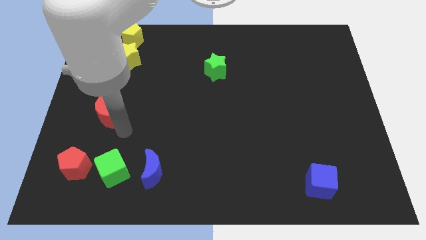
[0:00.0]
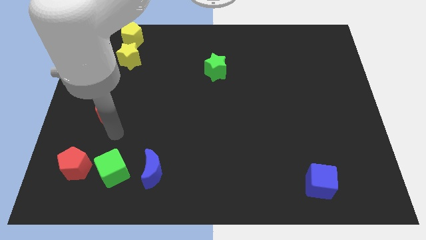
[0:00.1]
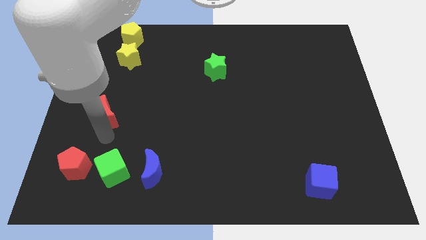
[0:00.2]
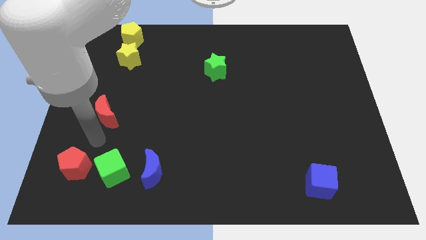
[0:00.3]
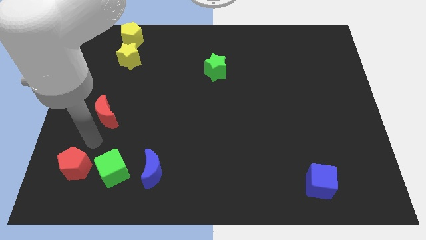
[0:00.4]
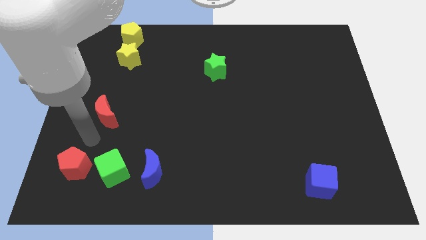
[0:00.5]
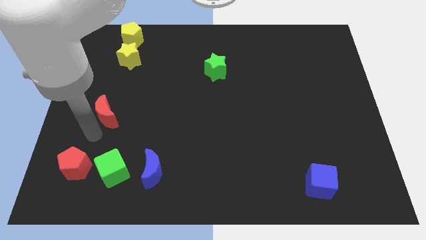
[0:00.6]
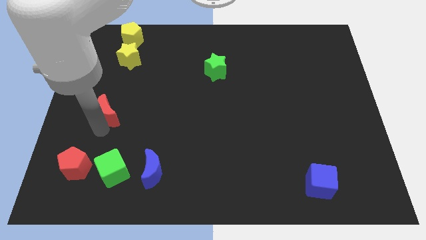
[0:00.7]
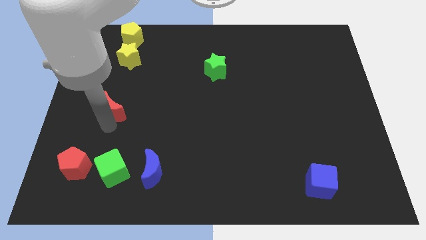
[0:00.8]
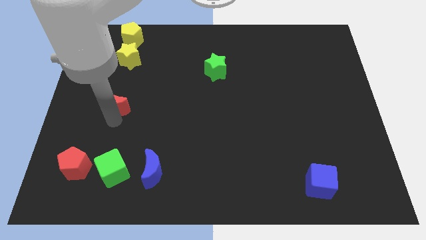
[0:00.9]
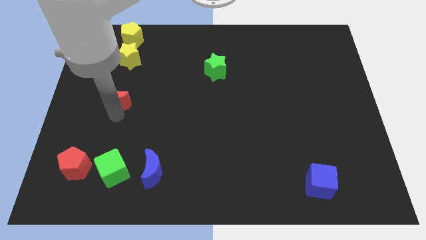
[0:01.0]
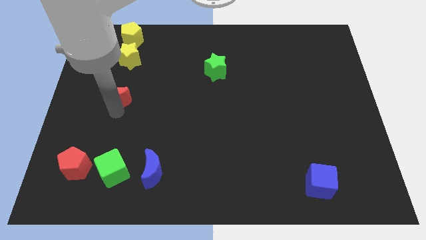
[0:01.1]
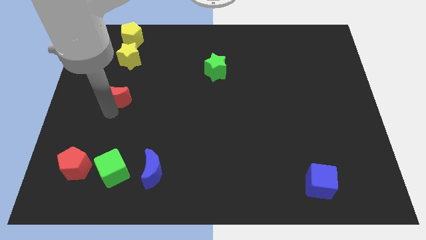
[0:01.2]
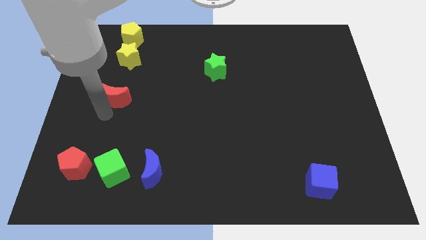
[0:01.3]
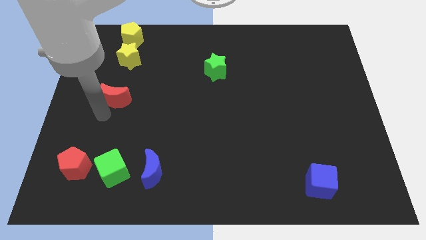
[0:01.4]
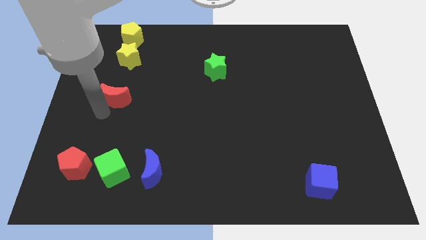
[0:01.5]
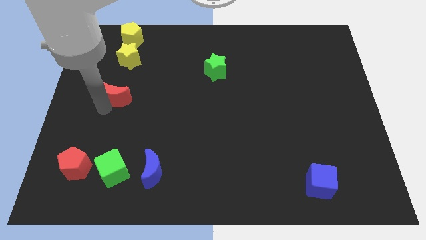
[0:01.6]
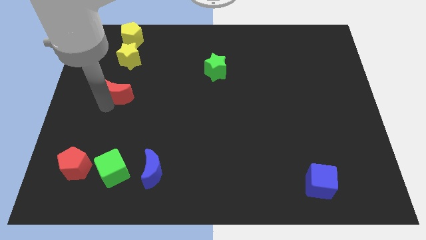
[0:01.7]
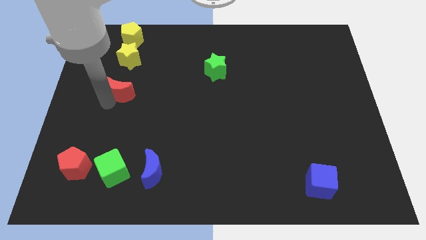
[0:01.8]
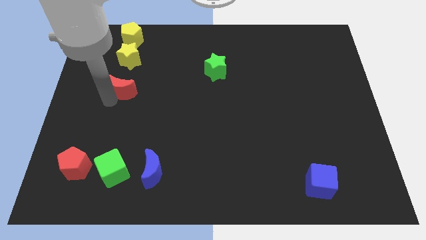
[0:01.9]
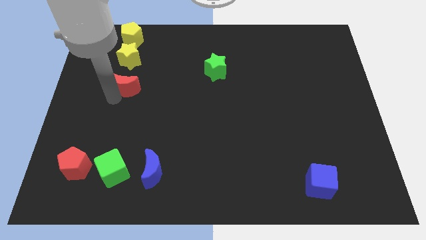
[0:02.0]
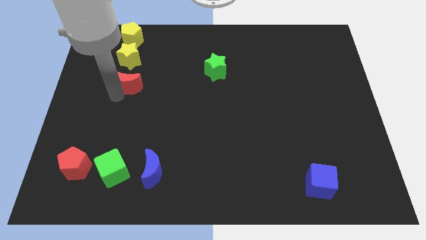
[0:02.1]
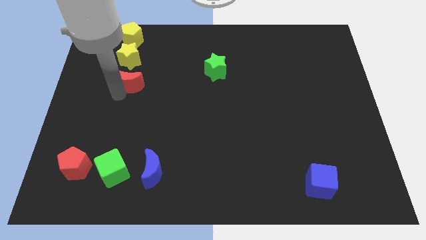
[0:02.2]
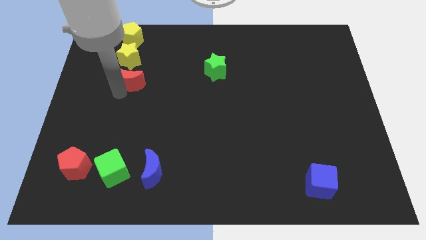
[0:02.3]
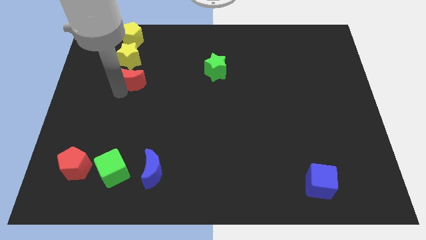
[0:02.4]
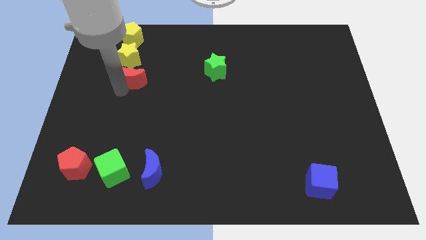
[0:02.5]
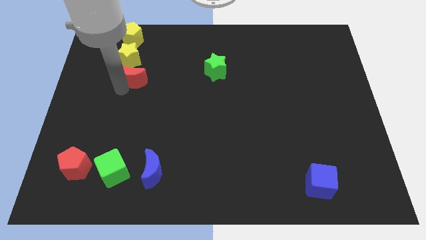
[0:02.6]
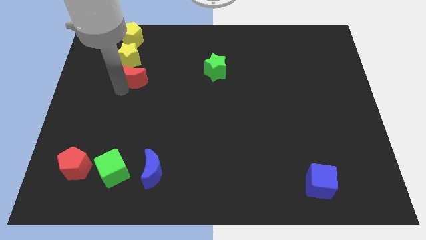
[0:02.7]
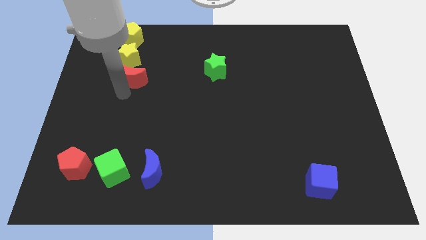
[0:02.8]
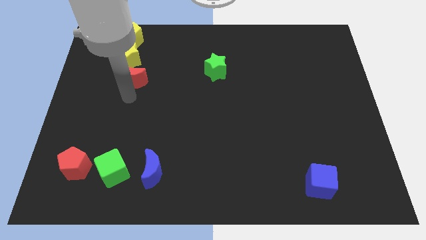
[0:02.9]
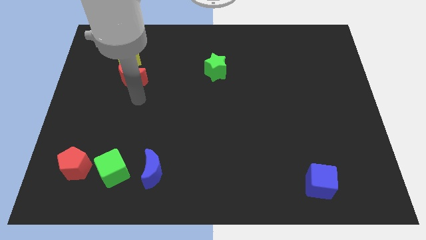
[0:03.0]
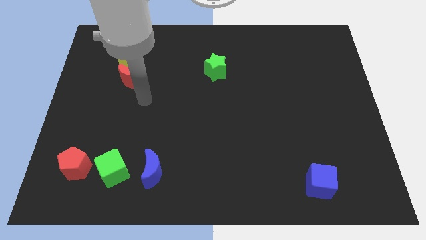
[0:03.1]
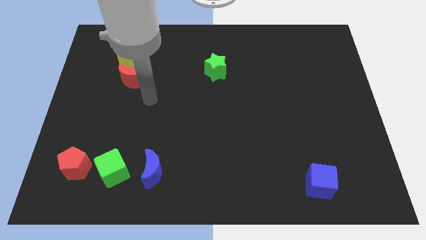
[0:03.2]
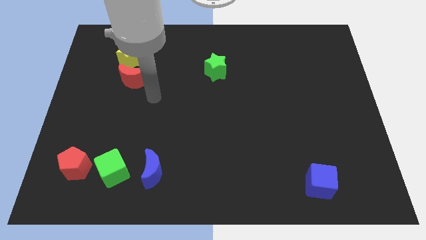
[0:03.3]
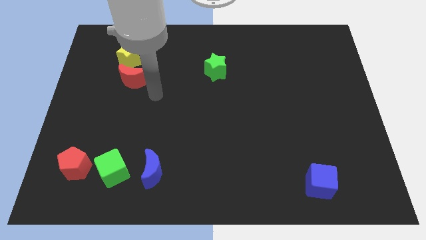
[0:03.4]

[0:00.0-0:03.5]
move red moon below the yellow star

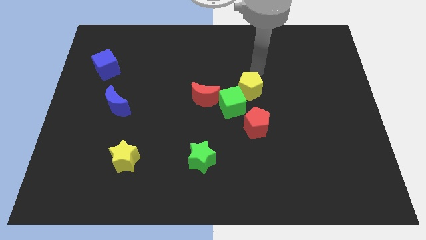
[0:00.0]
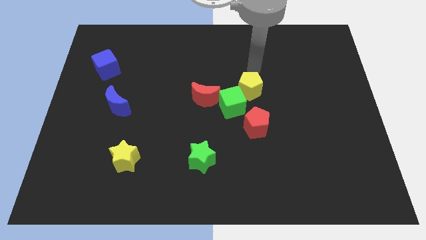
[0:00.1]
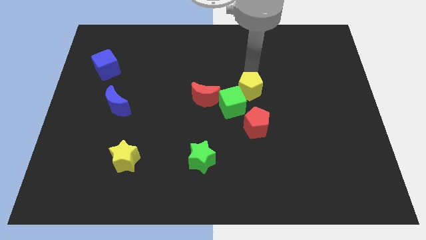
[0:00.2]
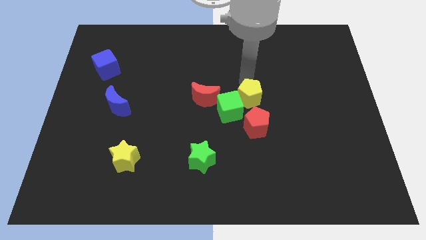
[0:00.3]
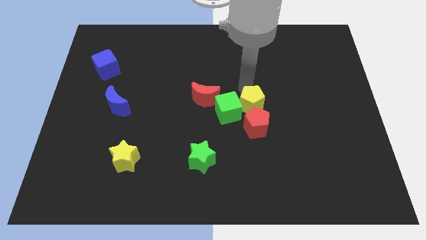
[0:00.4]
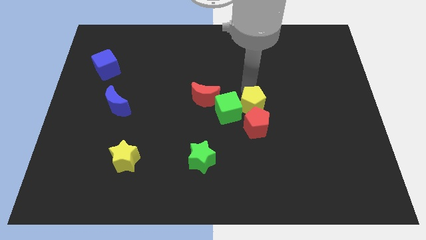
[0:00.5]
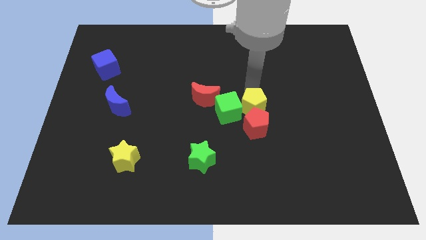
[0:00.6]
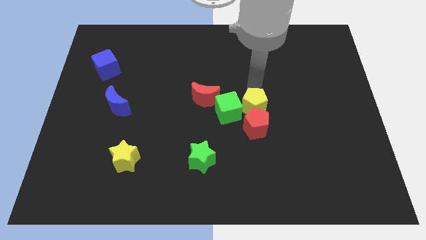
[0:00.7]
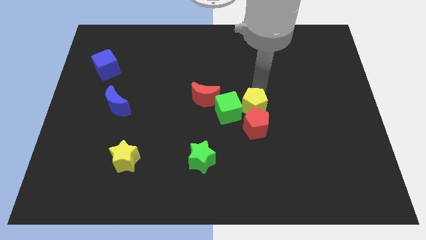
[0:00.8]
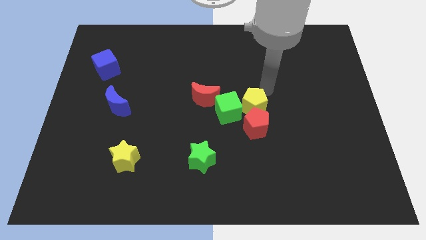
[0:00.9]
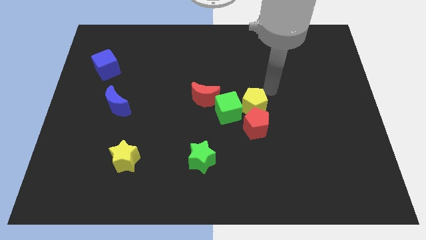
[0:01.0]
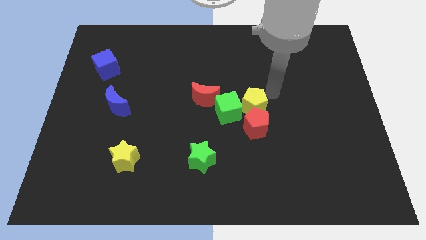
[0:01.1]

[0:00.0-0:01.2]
move the yellow pentagon towards the top of the red pentagon

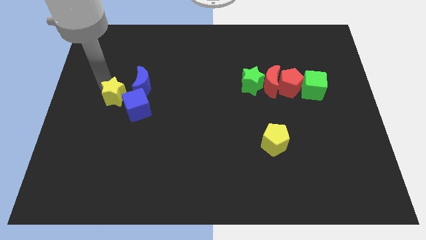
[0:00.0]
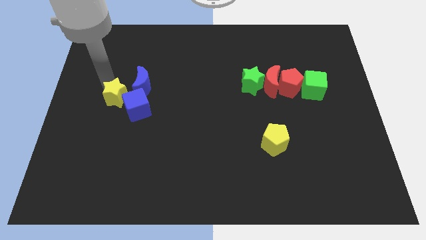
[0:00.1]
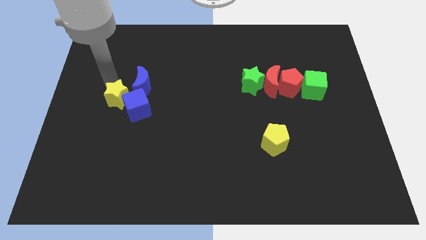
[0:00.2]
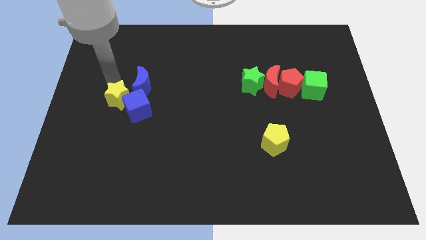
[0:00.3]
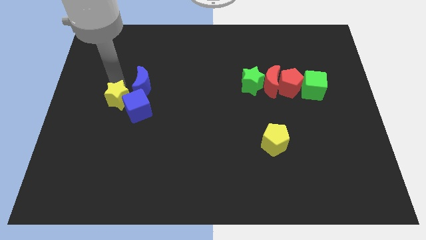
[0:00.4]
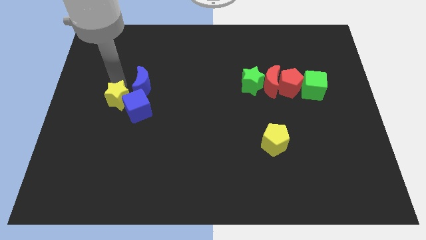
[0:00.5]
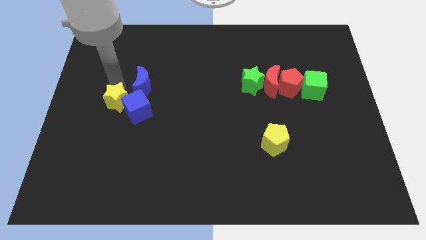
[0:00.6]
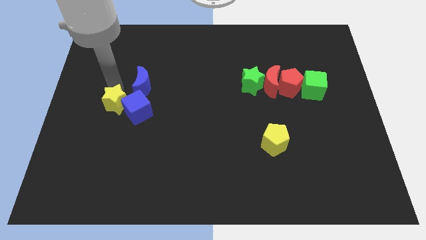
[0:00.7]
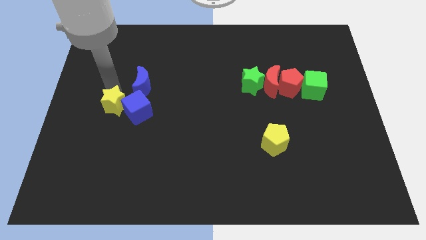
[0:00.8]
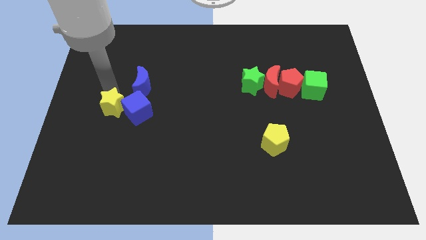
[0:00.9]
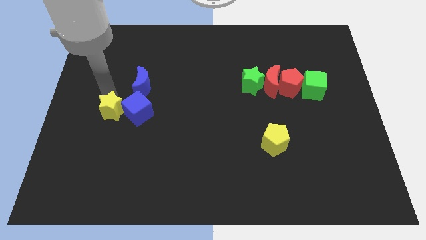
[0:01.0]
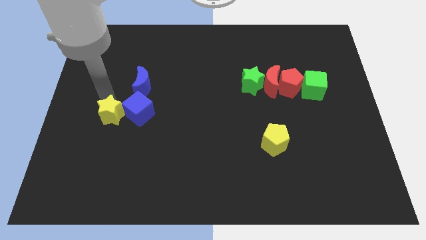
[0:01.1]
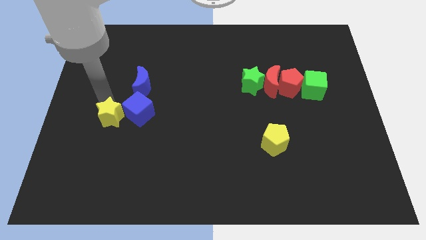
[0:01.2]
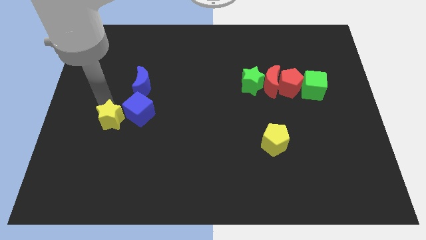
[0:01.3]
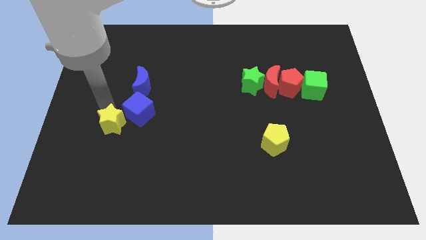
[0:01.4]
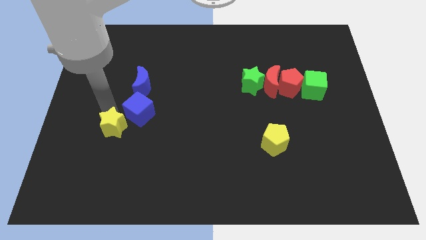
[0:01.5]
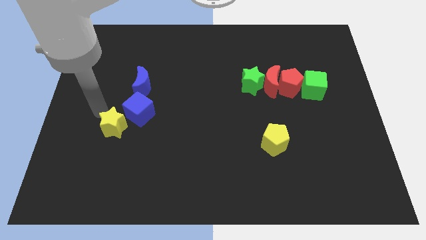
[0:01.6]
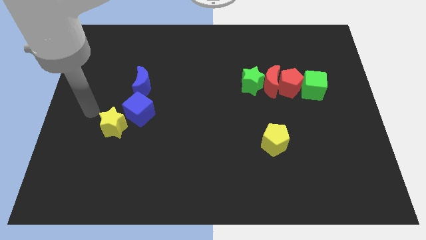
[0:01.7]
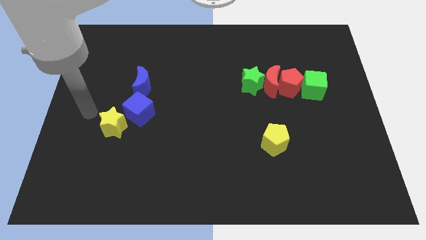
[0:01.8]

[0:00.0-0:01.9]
move the yellow star slightly to the bottom left of the board

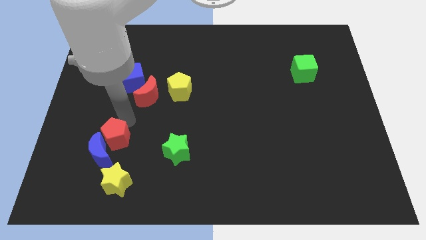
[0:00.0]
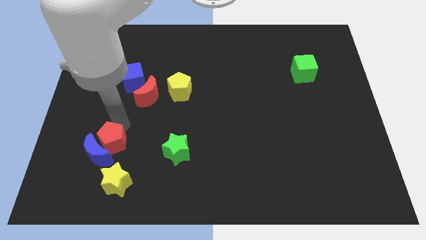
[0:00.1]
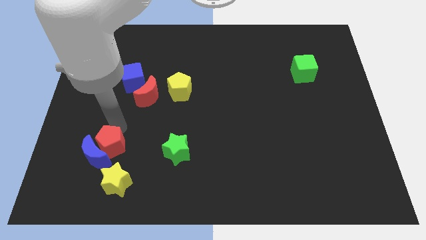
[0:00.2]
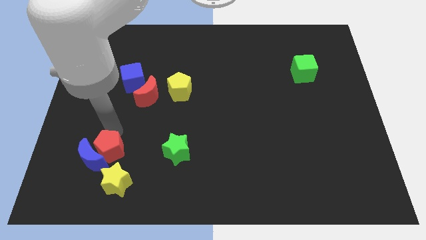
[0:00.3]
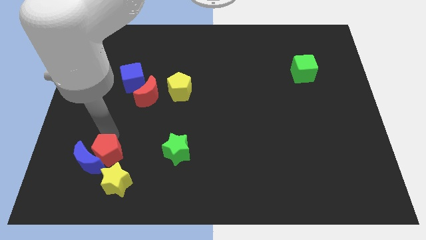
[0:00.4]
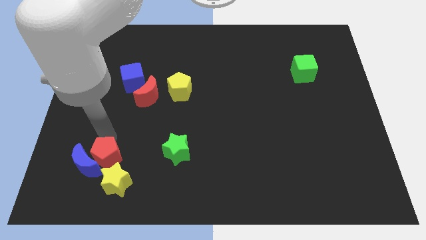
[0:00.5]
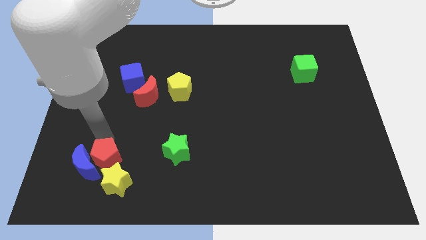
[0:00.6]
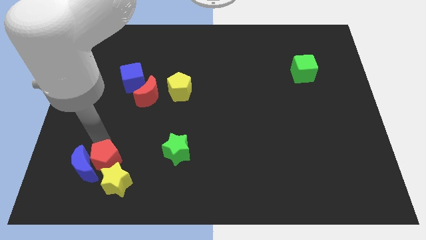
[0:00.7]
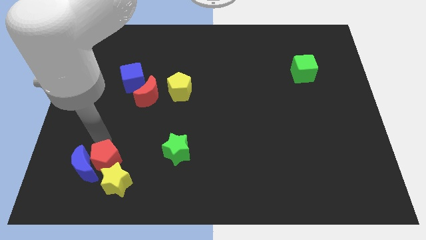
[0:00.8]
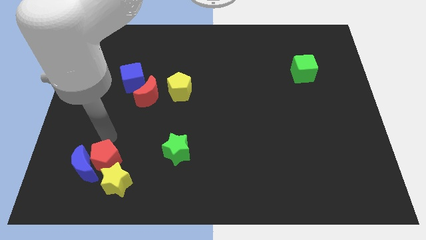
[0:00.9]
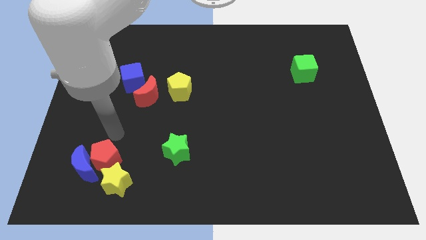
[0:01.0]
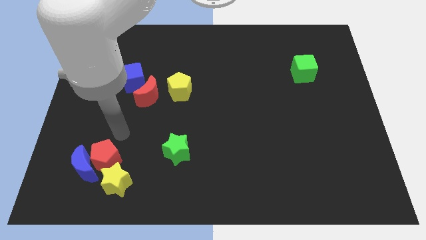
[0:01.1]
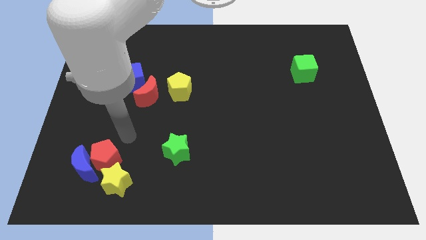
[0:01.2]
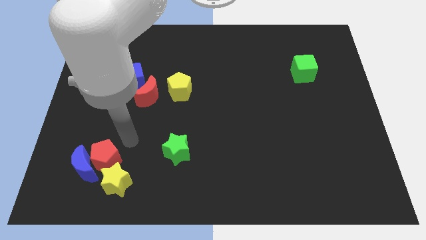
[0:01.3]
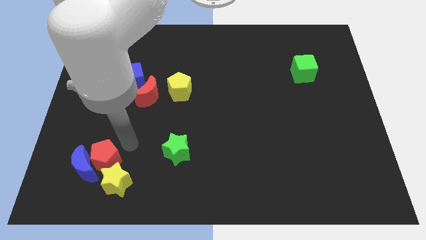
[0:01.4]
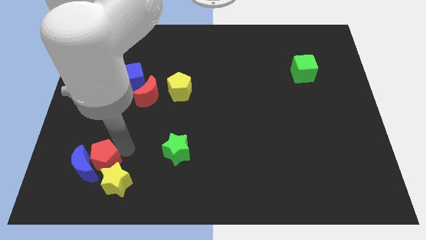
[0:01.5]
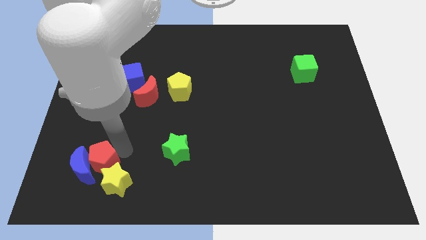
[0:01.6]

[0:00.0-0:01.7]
move the red pentagon to the right of the blue crescent

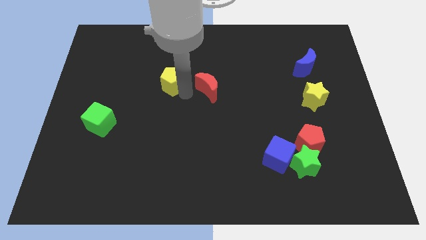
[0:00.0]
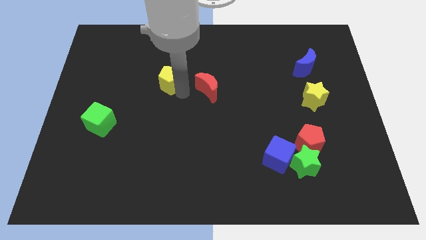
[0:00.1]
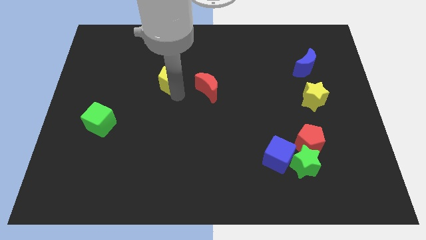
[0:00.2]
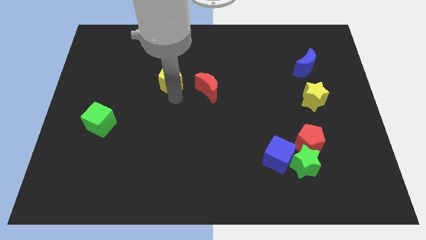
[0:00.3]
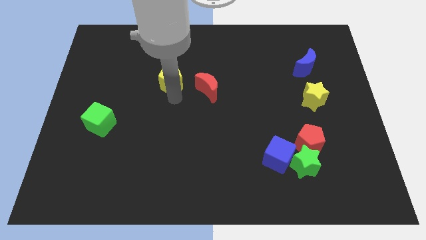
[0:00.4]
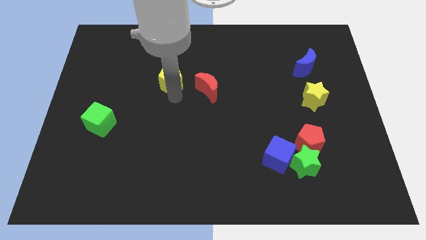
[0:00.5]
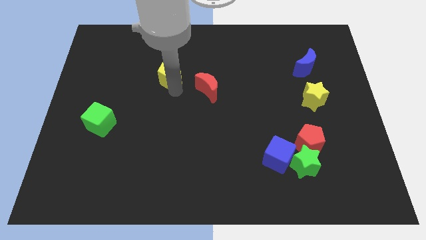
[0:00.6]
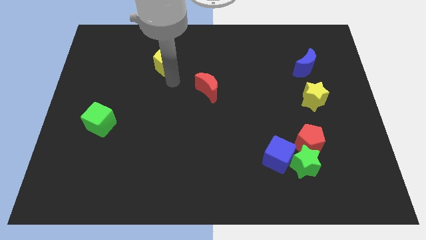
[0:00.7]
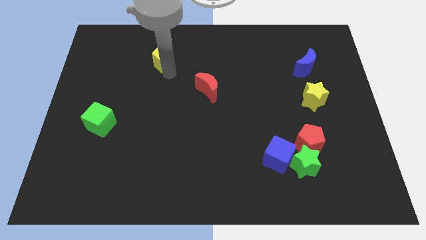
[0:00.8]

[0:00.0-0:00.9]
move yellow pentagon slightly upwards
